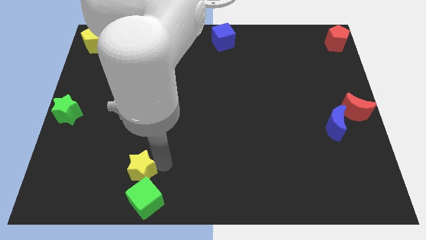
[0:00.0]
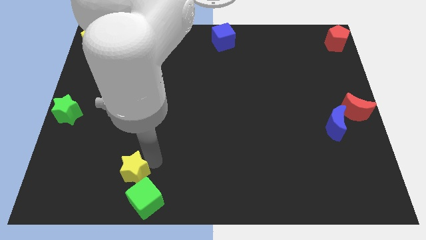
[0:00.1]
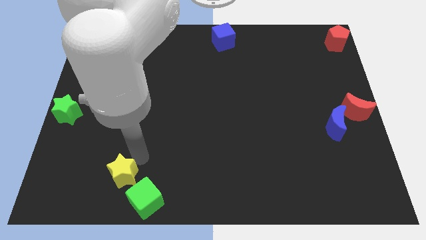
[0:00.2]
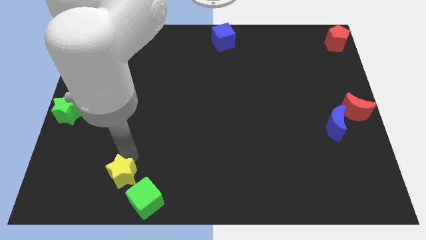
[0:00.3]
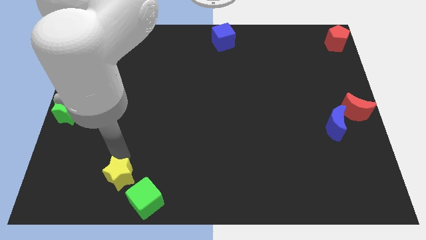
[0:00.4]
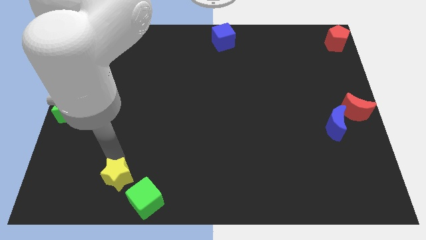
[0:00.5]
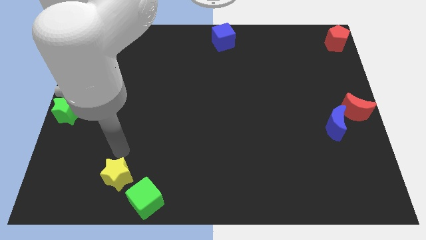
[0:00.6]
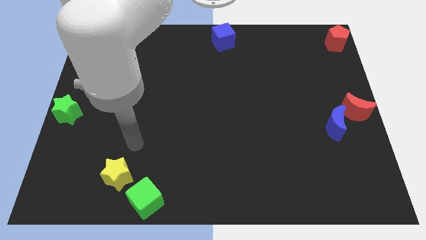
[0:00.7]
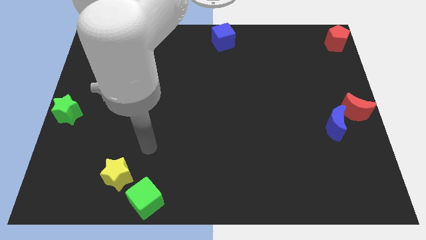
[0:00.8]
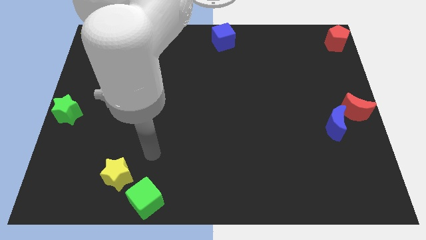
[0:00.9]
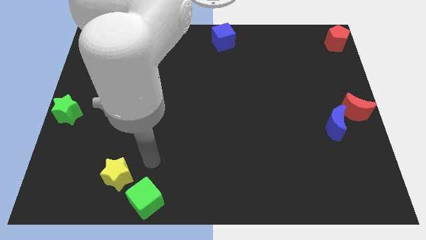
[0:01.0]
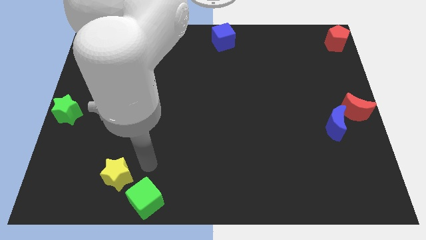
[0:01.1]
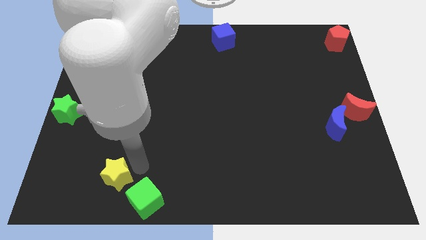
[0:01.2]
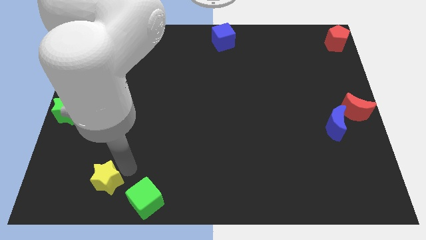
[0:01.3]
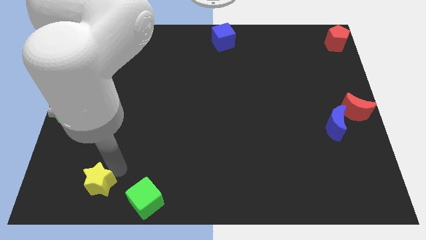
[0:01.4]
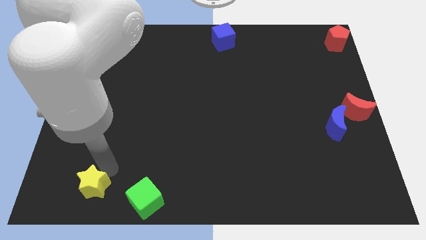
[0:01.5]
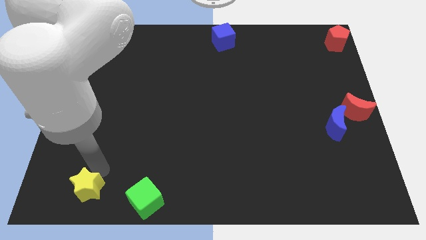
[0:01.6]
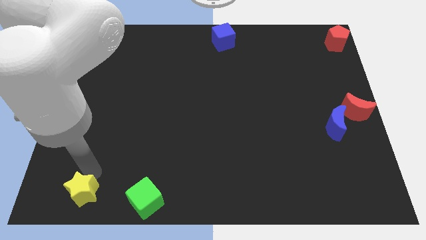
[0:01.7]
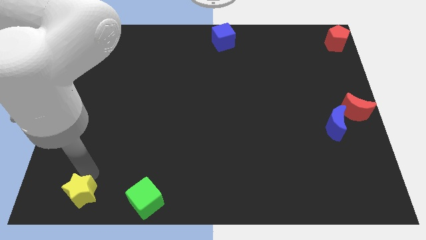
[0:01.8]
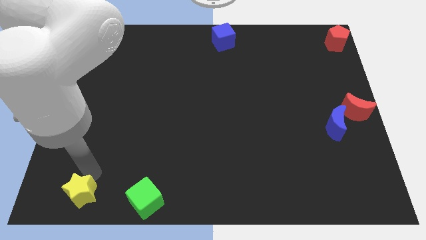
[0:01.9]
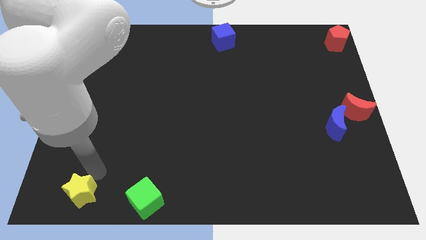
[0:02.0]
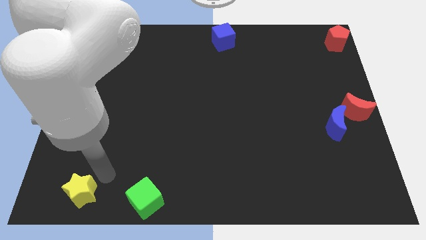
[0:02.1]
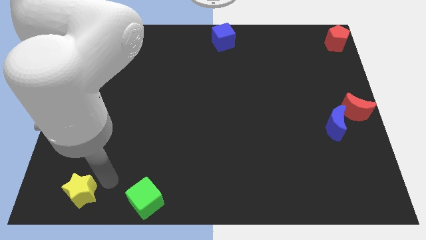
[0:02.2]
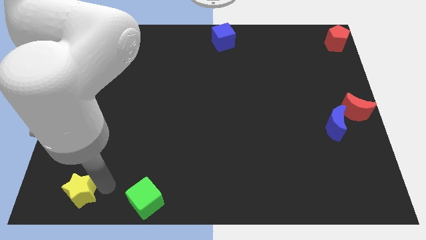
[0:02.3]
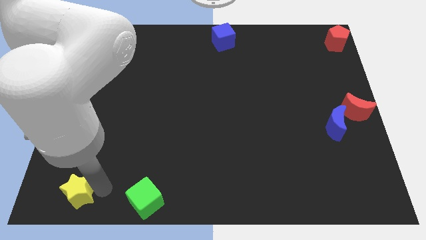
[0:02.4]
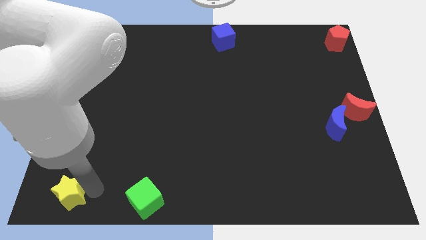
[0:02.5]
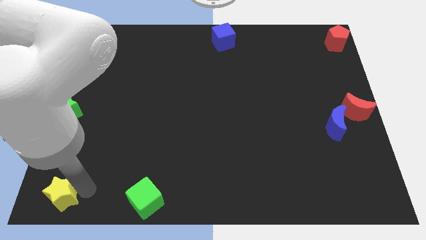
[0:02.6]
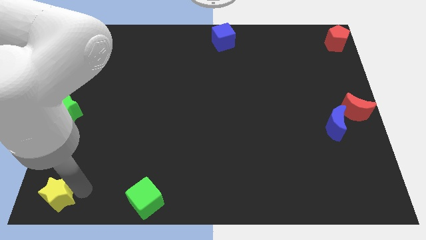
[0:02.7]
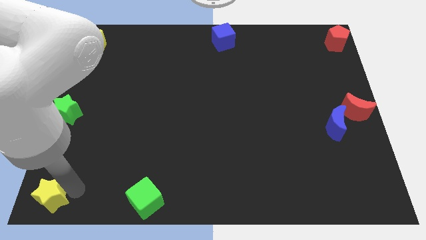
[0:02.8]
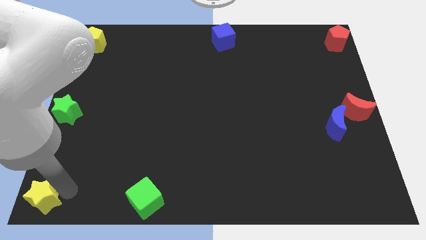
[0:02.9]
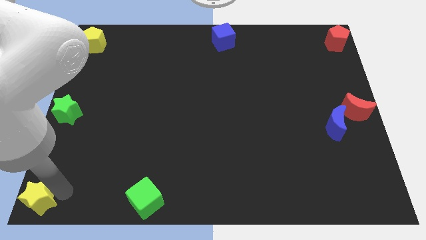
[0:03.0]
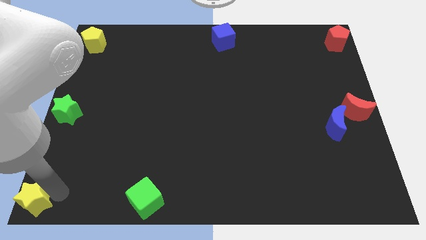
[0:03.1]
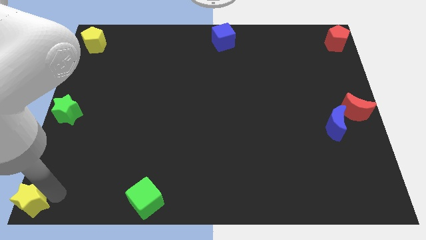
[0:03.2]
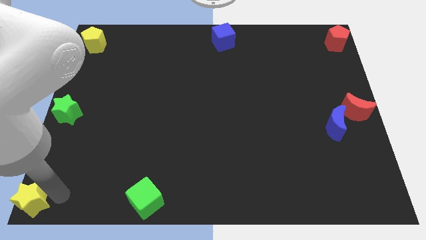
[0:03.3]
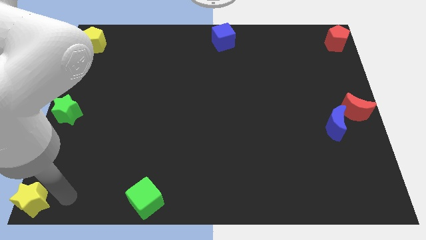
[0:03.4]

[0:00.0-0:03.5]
push yellow star towards bottom left corner of the board

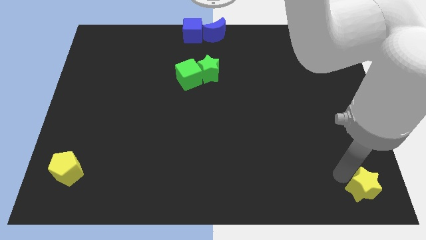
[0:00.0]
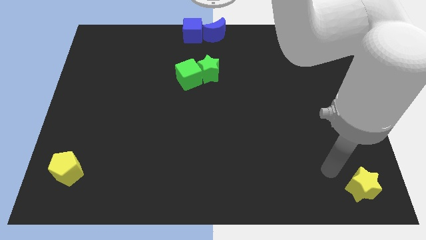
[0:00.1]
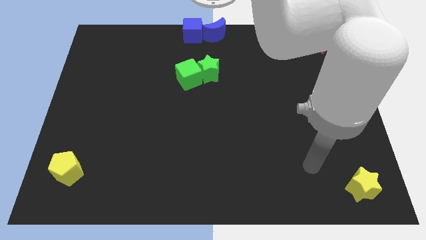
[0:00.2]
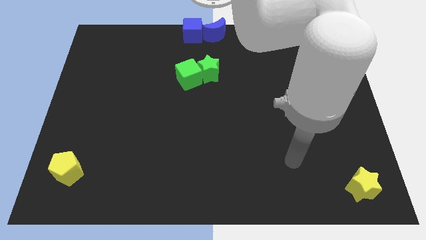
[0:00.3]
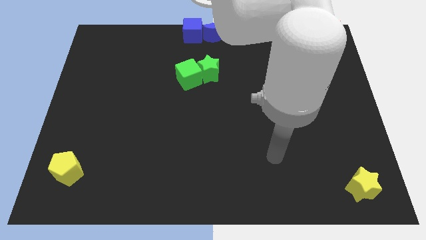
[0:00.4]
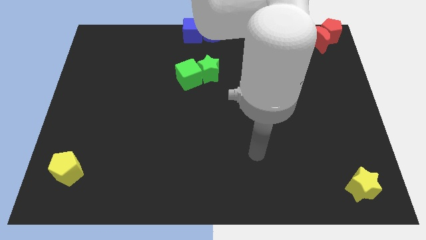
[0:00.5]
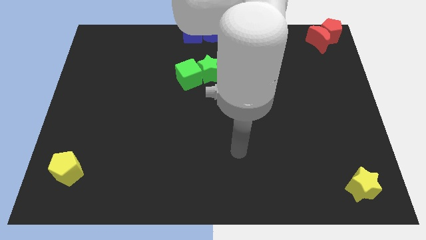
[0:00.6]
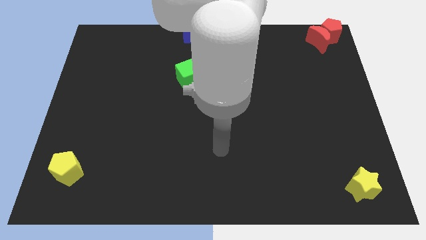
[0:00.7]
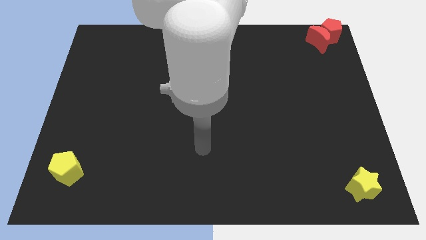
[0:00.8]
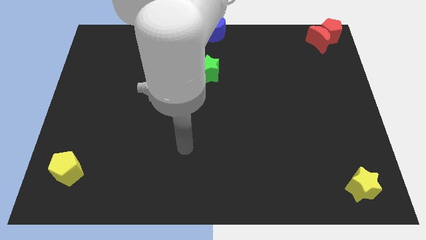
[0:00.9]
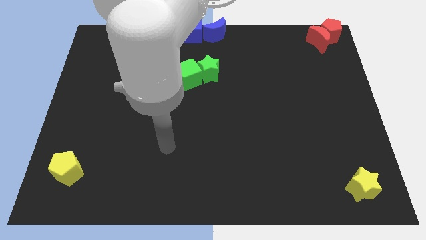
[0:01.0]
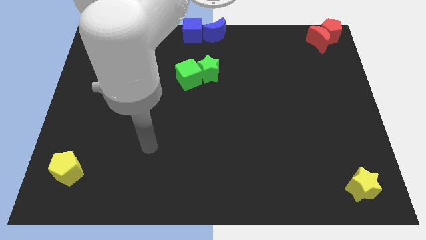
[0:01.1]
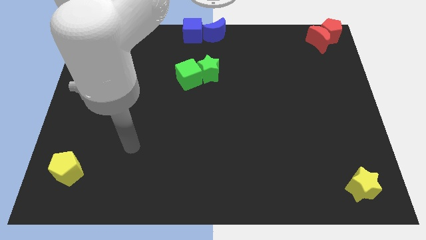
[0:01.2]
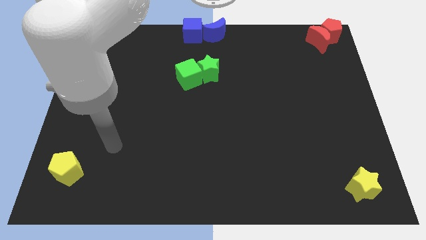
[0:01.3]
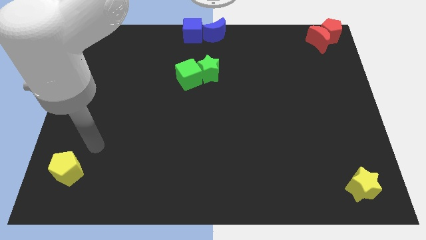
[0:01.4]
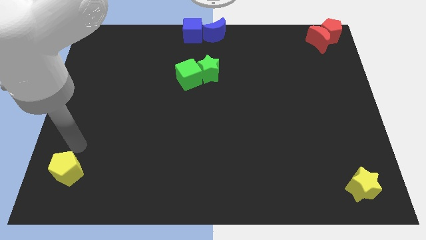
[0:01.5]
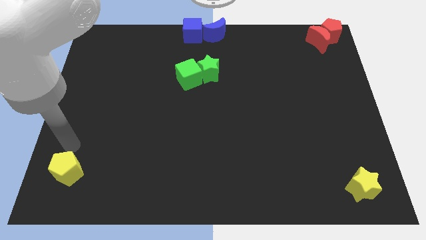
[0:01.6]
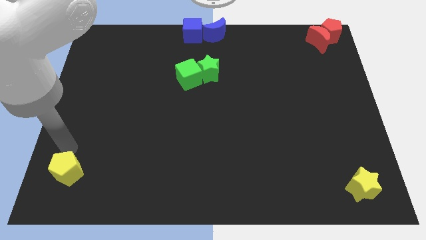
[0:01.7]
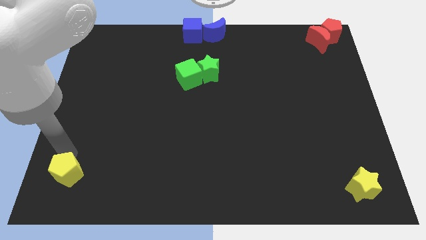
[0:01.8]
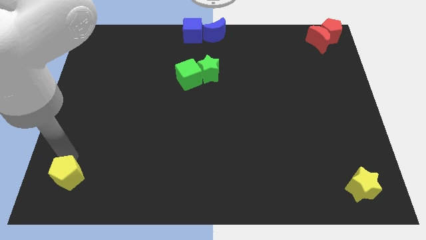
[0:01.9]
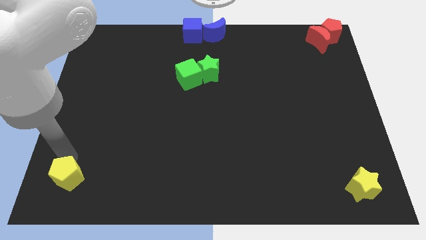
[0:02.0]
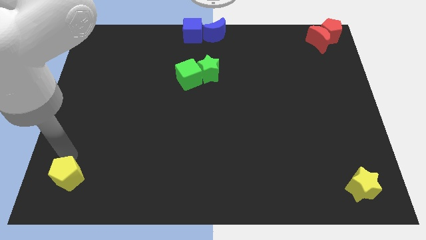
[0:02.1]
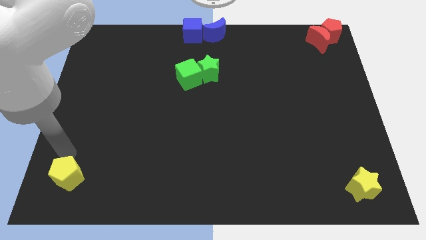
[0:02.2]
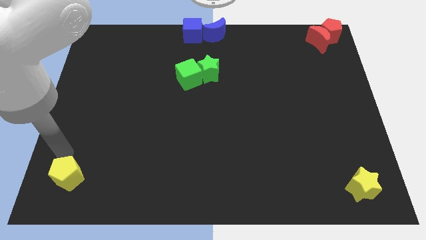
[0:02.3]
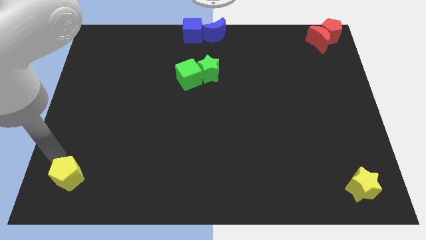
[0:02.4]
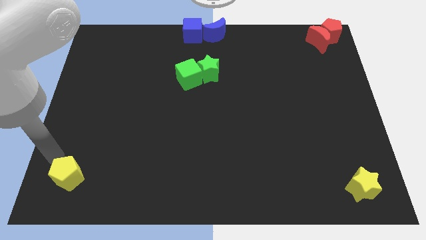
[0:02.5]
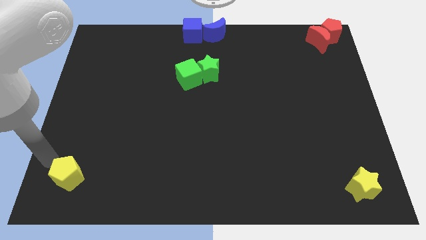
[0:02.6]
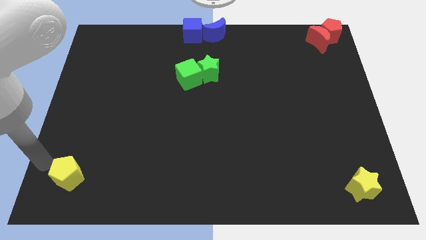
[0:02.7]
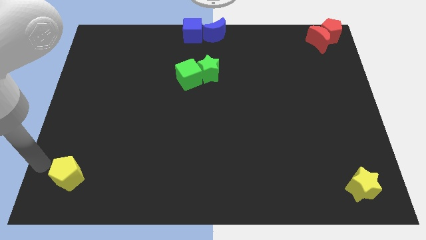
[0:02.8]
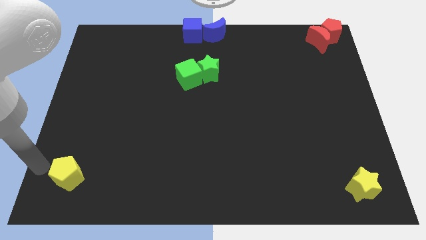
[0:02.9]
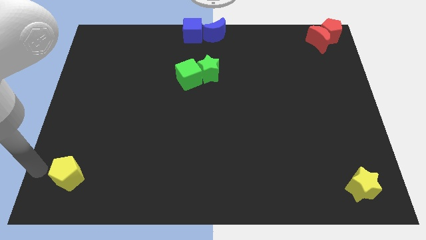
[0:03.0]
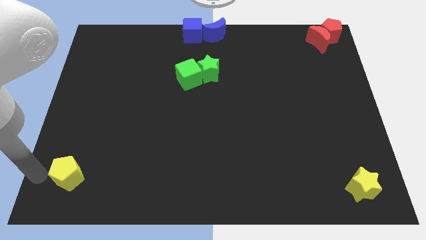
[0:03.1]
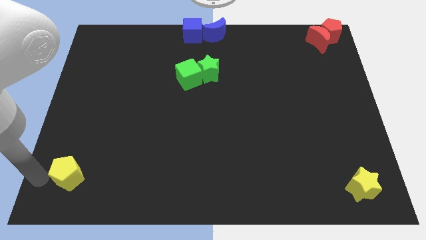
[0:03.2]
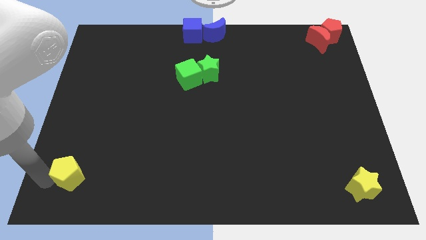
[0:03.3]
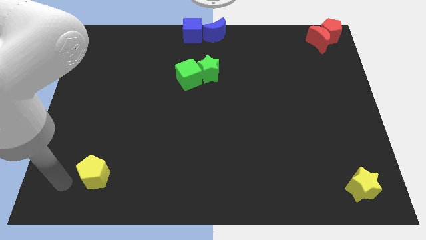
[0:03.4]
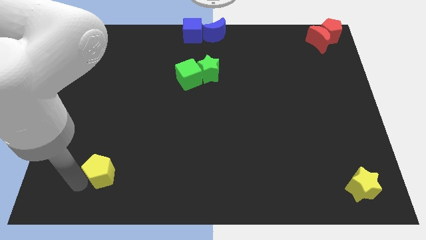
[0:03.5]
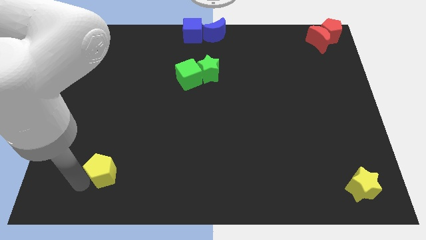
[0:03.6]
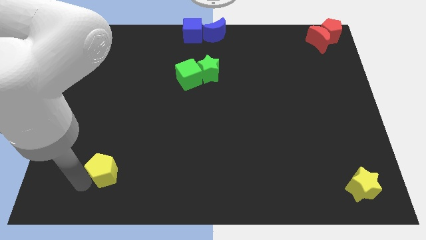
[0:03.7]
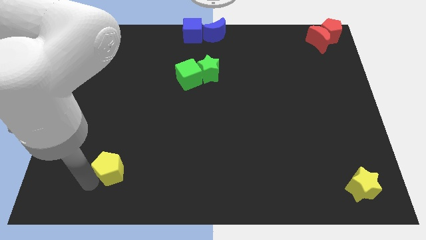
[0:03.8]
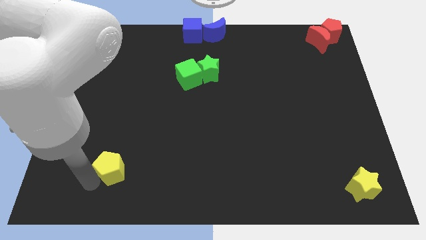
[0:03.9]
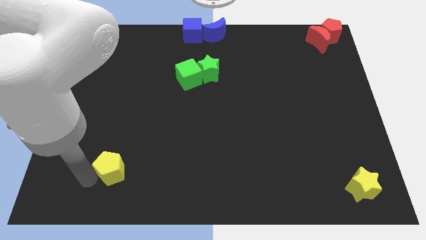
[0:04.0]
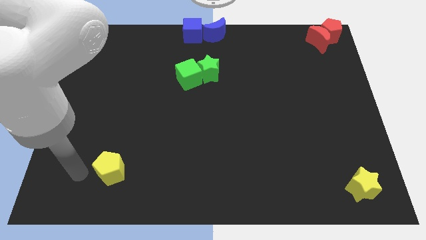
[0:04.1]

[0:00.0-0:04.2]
move your arm away from the yellow star

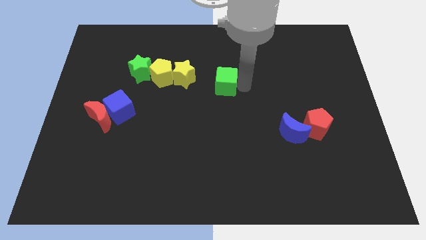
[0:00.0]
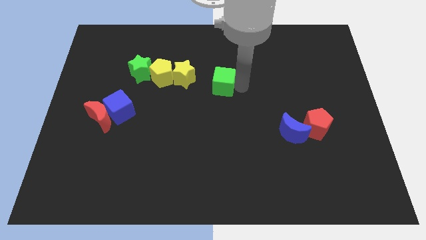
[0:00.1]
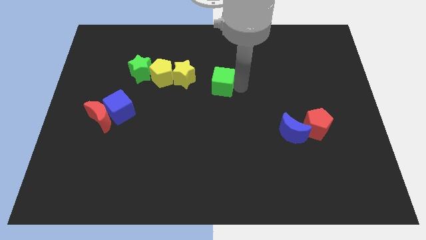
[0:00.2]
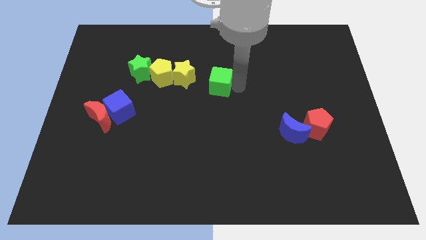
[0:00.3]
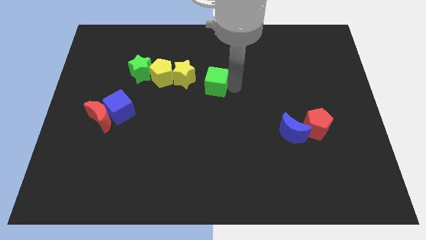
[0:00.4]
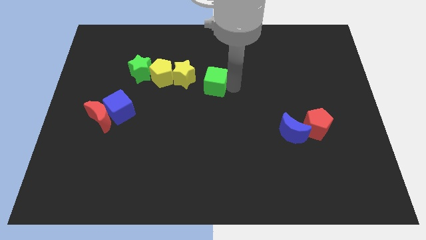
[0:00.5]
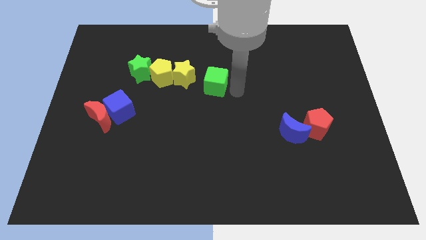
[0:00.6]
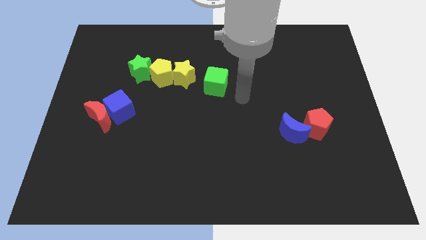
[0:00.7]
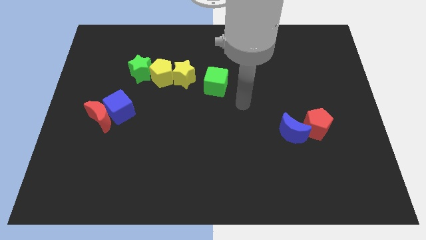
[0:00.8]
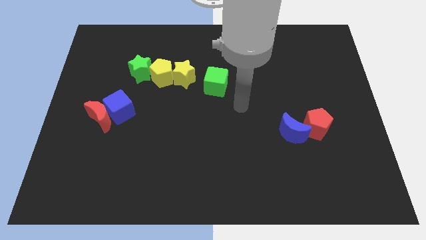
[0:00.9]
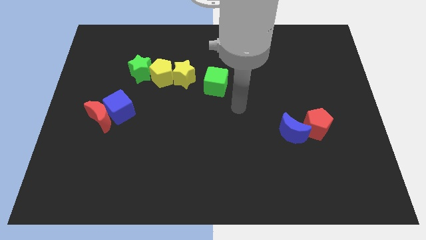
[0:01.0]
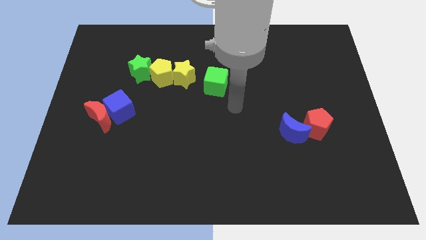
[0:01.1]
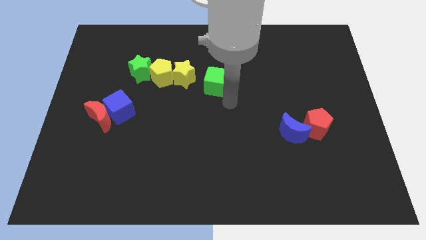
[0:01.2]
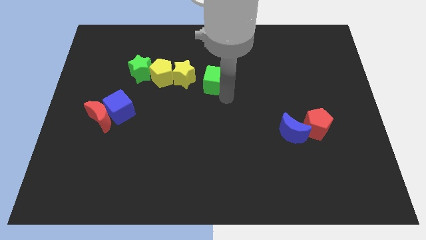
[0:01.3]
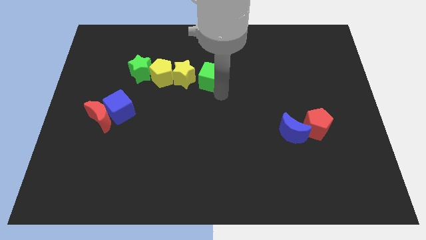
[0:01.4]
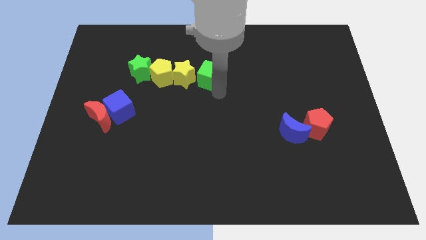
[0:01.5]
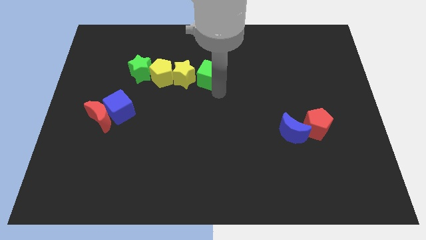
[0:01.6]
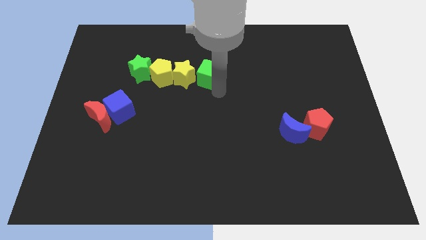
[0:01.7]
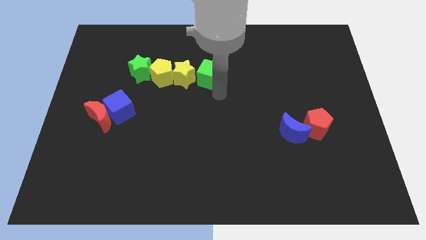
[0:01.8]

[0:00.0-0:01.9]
place the green cube close to the yellow star
